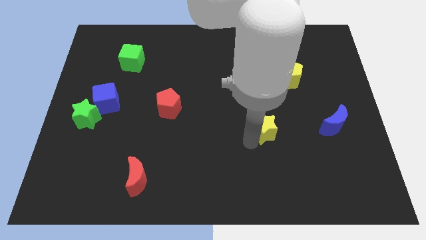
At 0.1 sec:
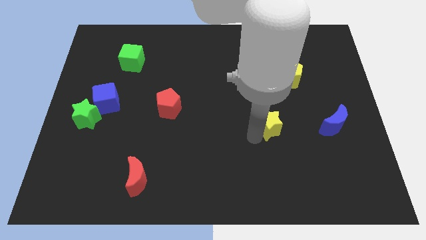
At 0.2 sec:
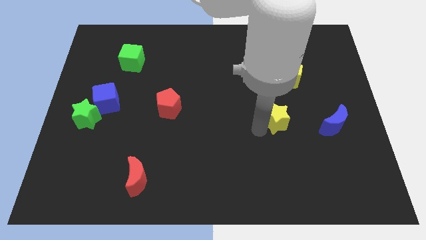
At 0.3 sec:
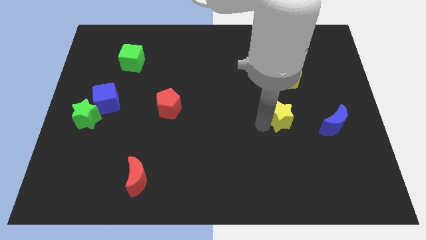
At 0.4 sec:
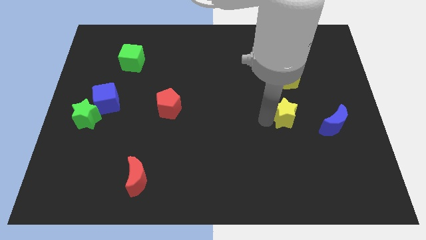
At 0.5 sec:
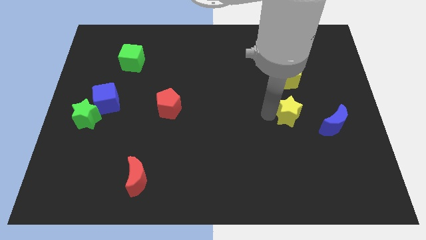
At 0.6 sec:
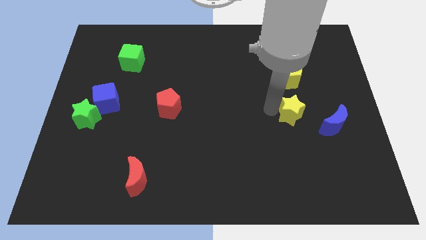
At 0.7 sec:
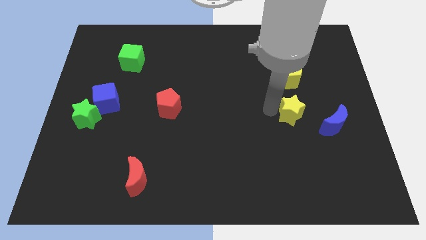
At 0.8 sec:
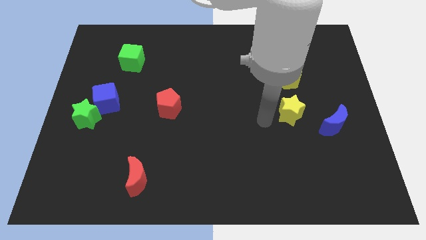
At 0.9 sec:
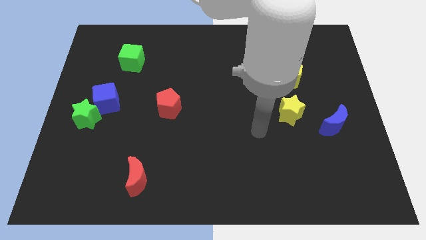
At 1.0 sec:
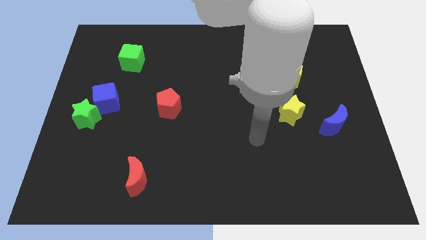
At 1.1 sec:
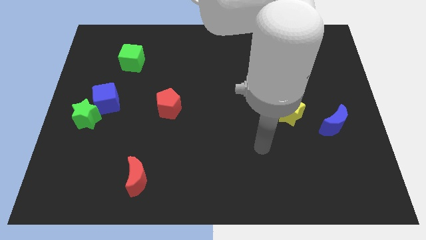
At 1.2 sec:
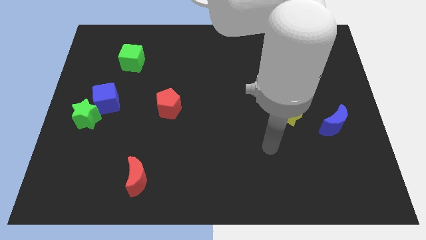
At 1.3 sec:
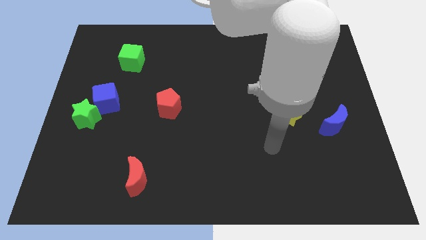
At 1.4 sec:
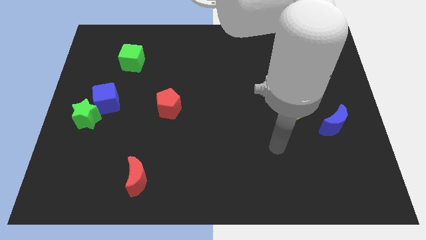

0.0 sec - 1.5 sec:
move the yellow star below the yellow pentagon

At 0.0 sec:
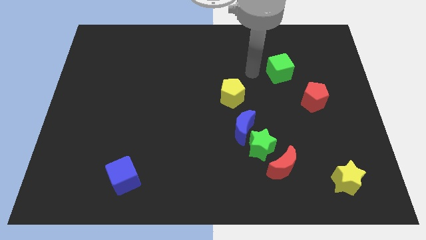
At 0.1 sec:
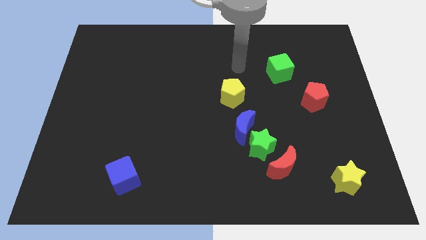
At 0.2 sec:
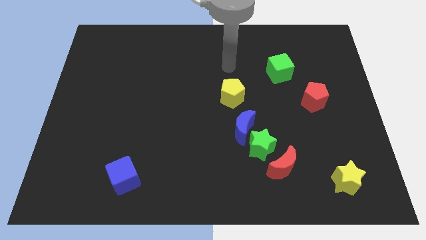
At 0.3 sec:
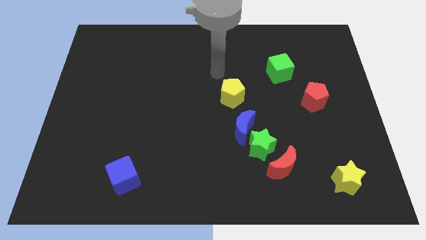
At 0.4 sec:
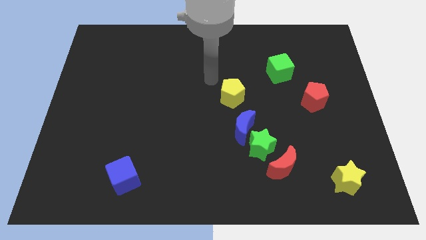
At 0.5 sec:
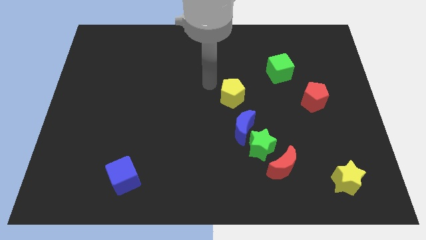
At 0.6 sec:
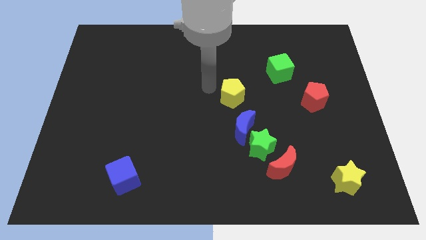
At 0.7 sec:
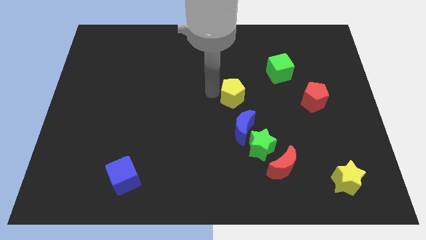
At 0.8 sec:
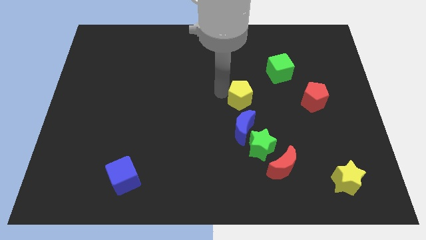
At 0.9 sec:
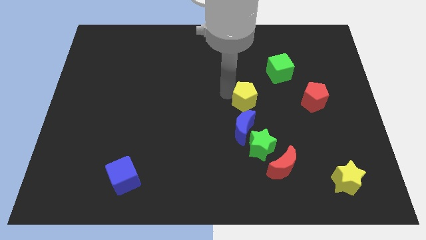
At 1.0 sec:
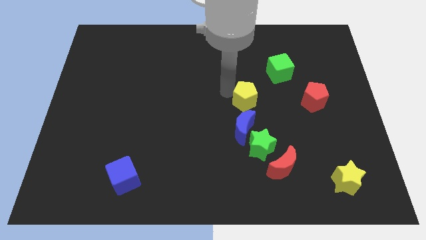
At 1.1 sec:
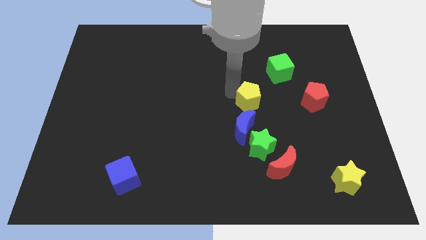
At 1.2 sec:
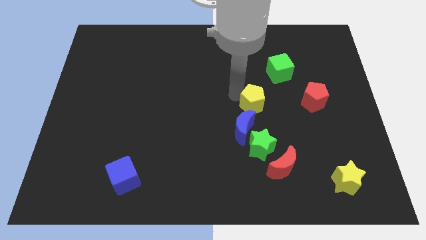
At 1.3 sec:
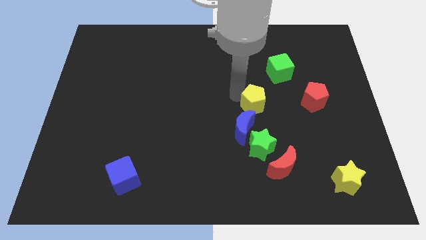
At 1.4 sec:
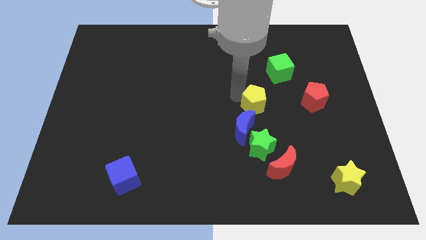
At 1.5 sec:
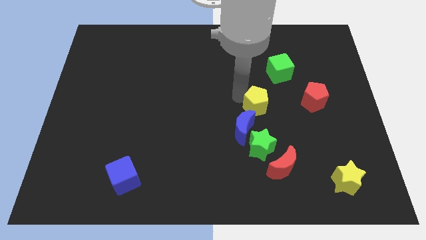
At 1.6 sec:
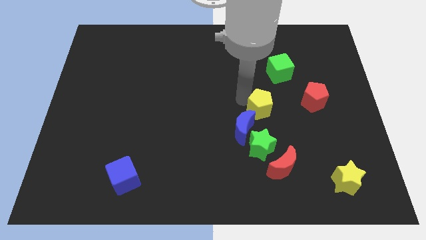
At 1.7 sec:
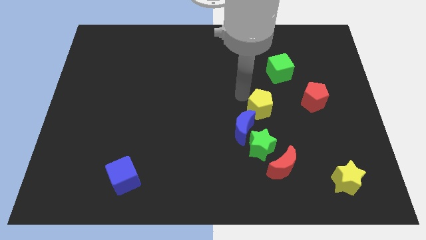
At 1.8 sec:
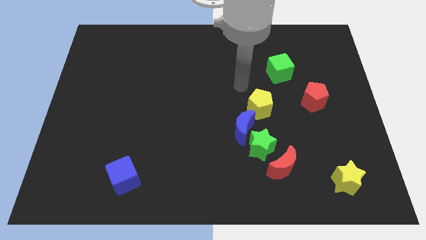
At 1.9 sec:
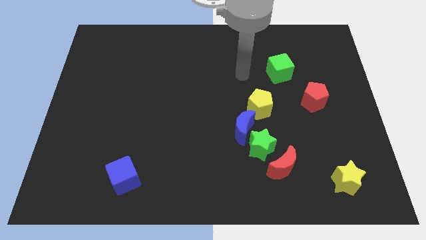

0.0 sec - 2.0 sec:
push the yellow pentagon right above blue moon

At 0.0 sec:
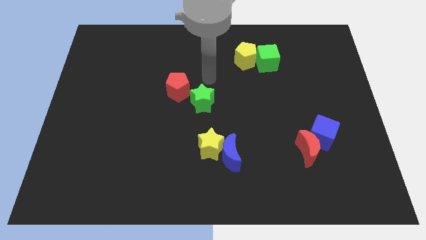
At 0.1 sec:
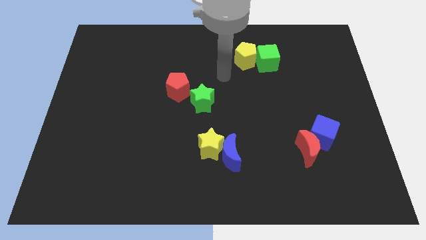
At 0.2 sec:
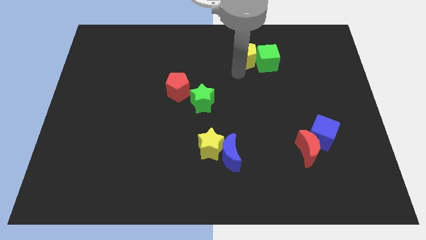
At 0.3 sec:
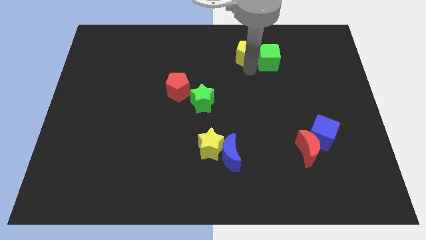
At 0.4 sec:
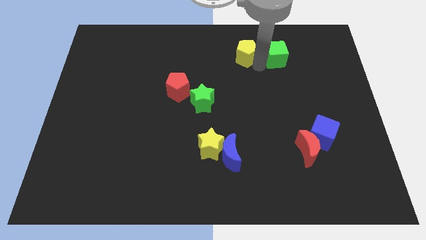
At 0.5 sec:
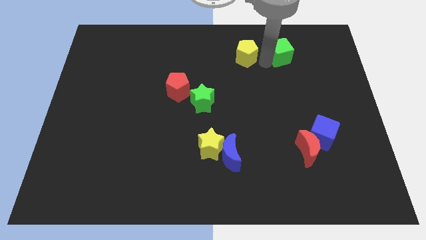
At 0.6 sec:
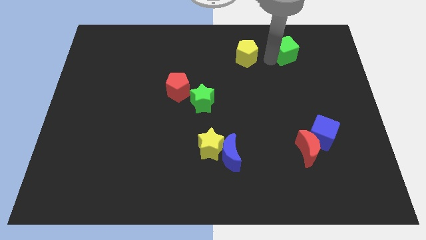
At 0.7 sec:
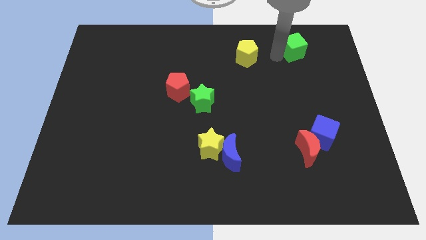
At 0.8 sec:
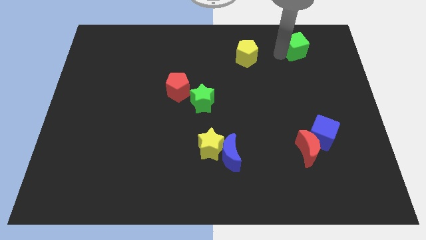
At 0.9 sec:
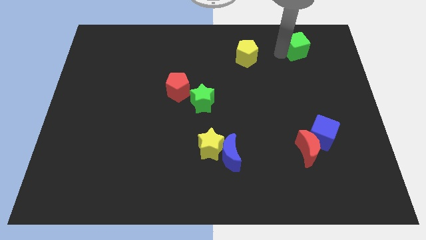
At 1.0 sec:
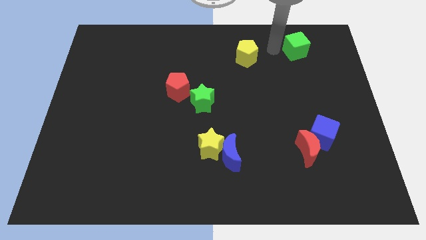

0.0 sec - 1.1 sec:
place your arm in between yellow pentagon and green cube

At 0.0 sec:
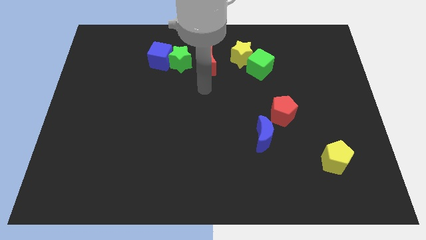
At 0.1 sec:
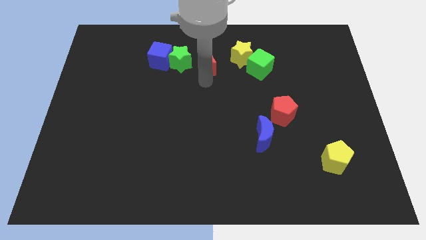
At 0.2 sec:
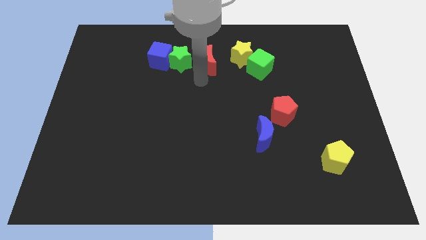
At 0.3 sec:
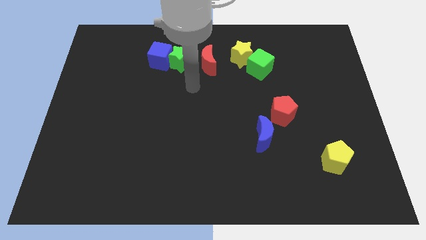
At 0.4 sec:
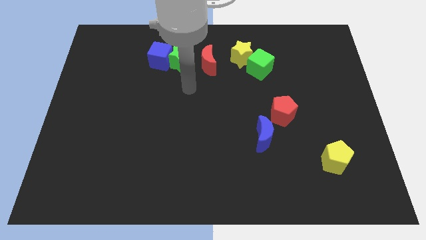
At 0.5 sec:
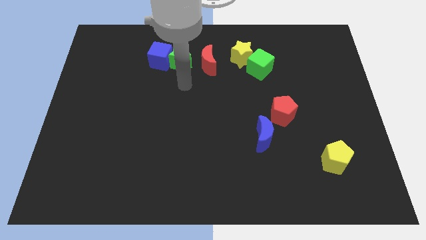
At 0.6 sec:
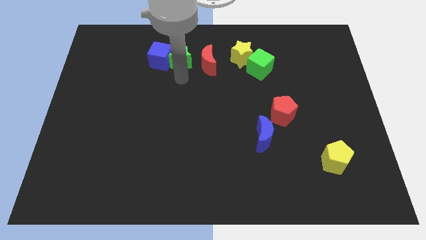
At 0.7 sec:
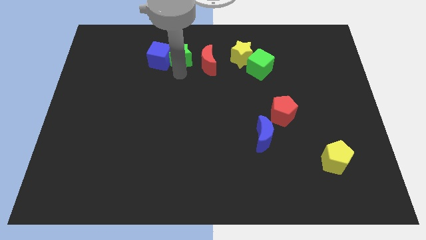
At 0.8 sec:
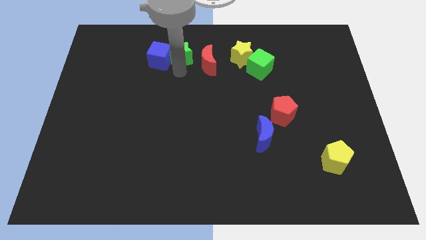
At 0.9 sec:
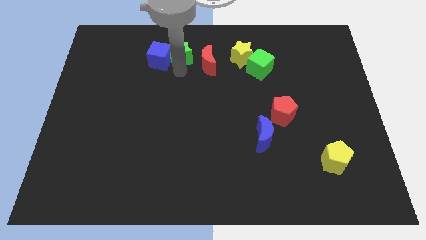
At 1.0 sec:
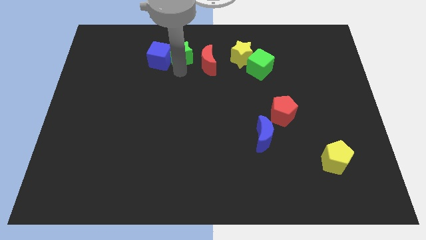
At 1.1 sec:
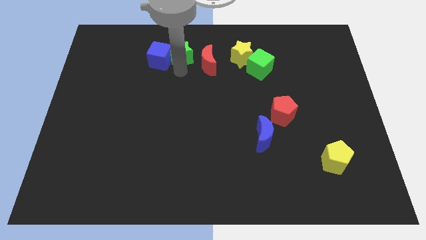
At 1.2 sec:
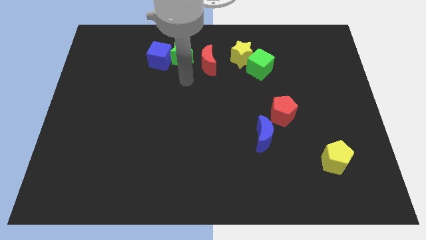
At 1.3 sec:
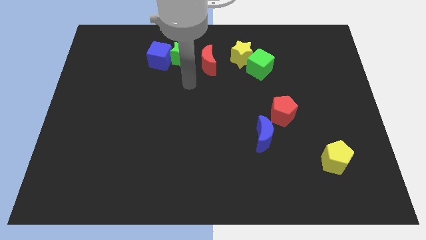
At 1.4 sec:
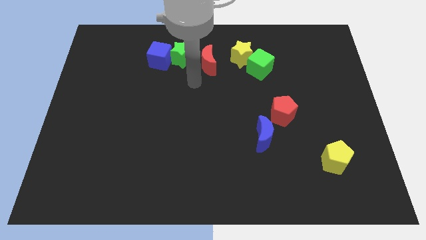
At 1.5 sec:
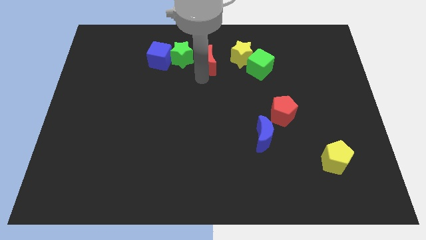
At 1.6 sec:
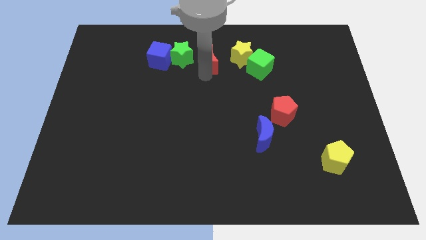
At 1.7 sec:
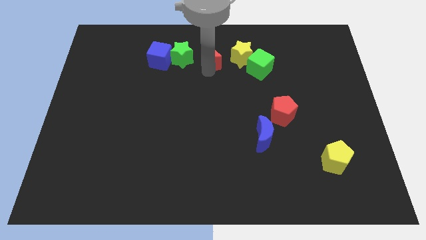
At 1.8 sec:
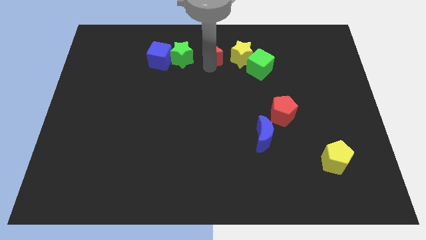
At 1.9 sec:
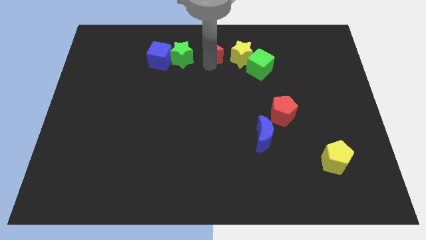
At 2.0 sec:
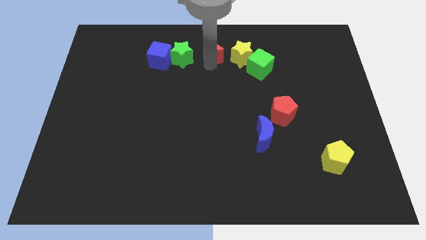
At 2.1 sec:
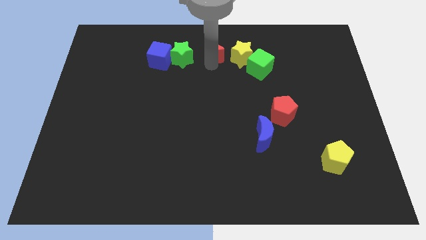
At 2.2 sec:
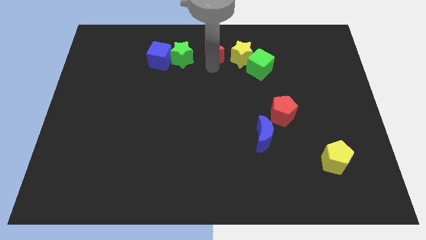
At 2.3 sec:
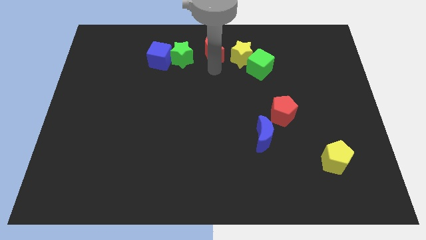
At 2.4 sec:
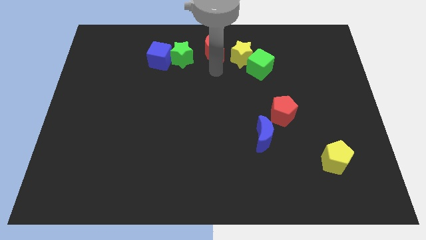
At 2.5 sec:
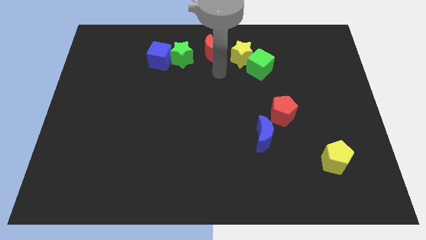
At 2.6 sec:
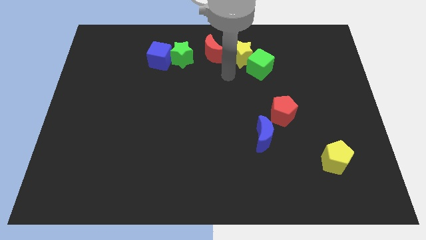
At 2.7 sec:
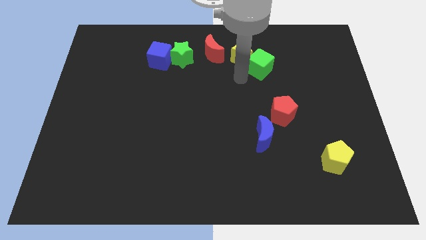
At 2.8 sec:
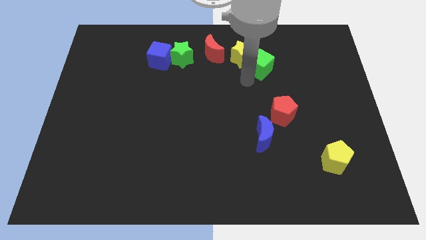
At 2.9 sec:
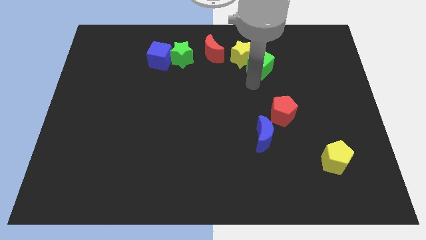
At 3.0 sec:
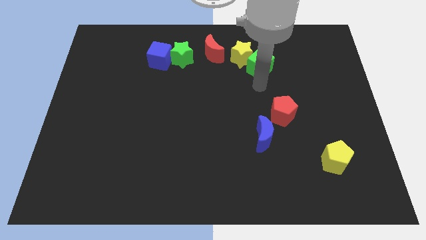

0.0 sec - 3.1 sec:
move the red crescent slightly towards the top center of the board

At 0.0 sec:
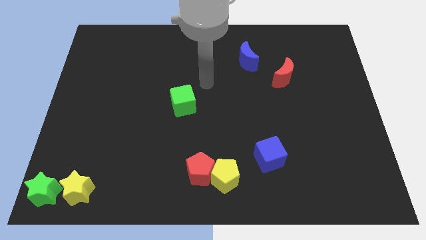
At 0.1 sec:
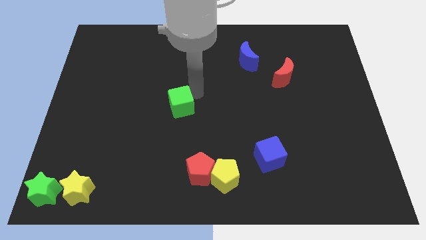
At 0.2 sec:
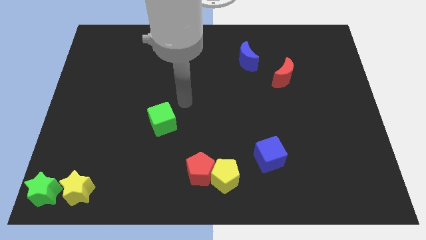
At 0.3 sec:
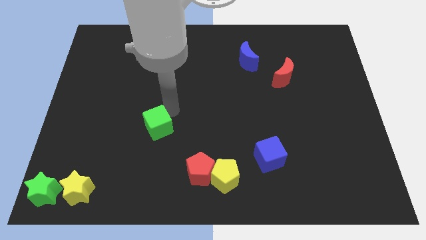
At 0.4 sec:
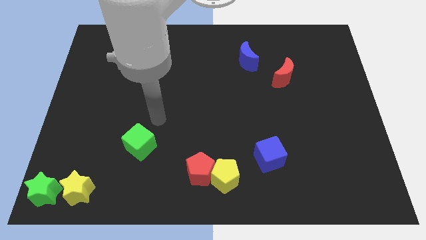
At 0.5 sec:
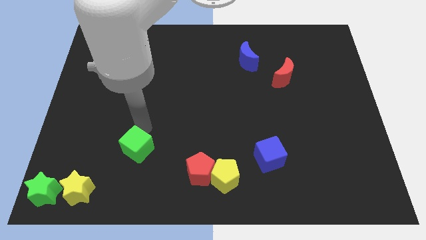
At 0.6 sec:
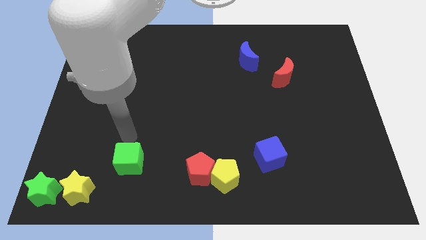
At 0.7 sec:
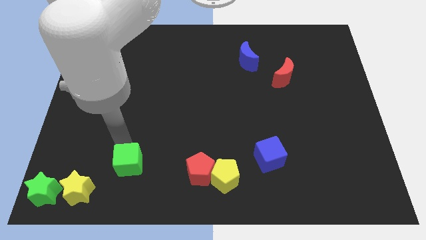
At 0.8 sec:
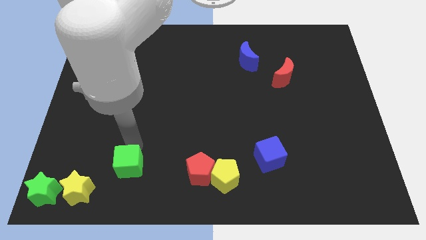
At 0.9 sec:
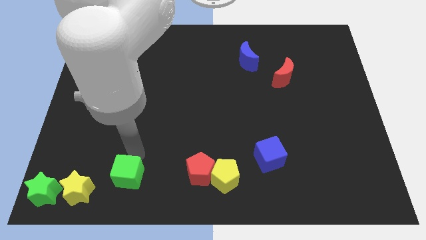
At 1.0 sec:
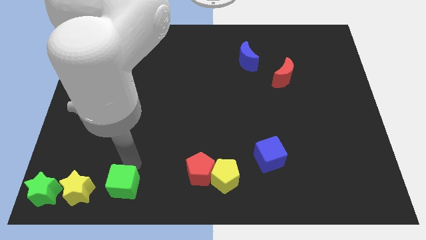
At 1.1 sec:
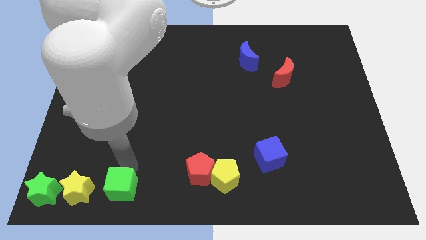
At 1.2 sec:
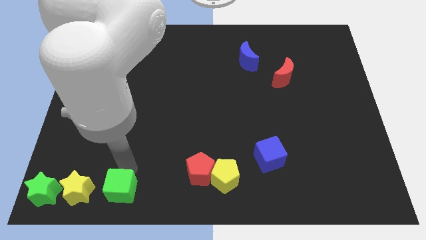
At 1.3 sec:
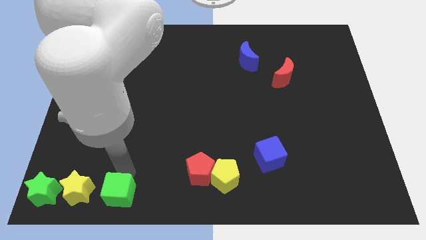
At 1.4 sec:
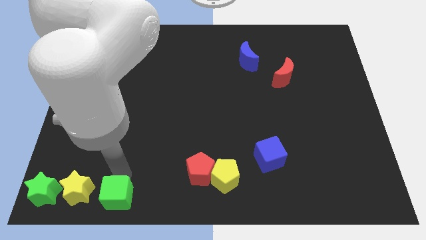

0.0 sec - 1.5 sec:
slide the green cube to the bottom side
